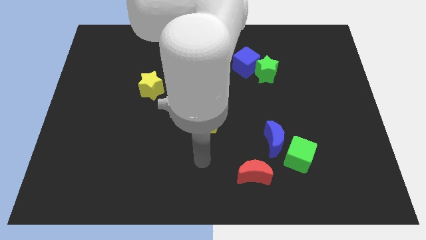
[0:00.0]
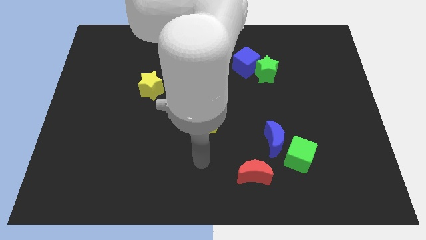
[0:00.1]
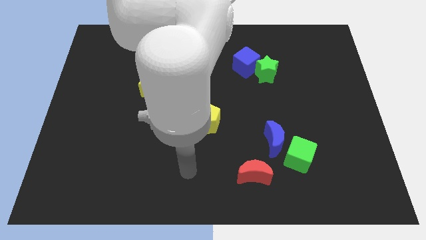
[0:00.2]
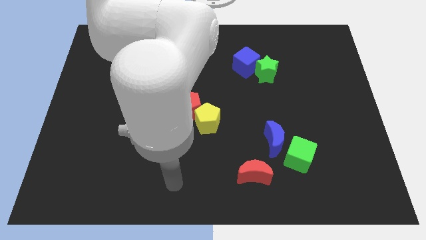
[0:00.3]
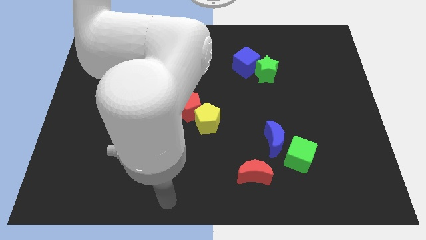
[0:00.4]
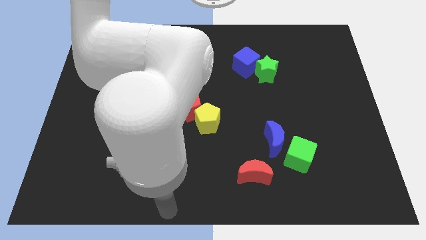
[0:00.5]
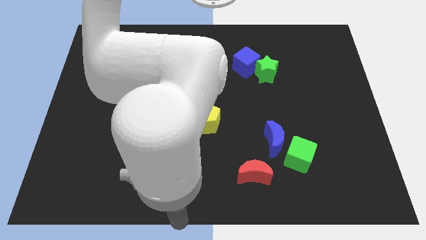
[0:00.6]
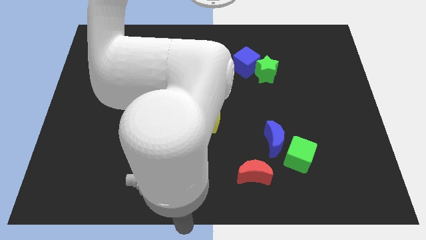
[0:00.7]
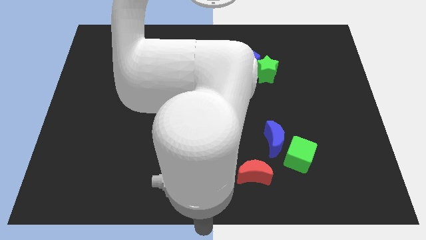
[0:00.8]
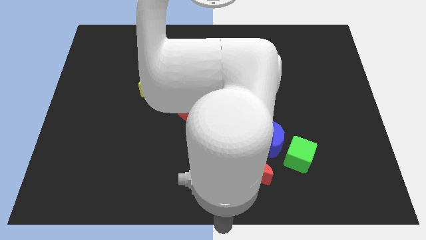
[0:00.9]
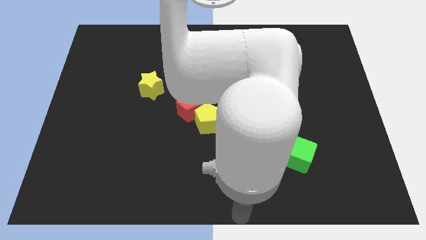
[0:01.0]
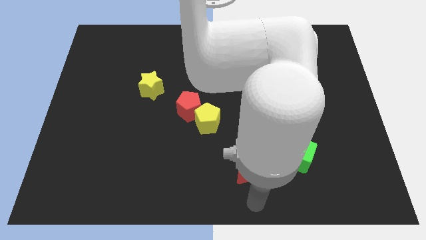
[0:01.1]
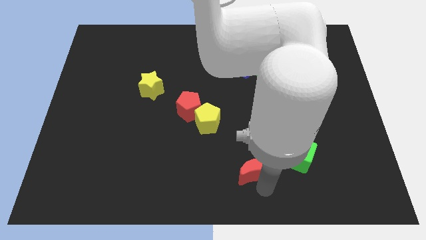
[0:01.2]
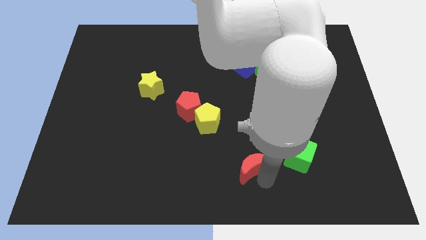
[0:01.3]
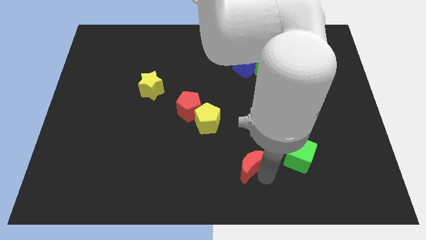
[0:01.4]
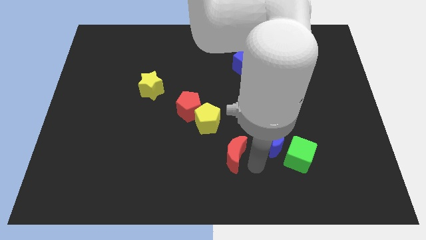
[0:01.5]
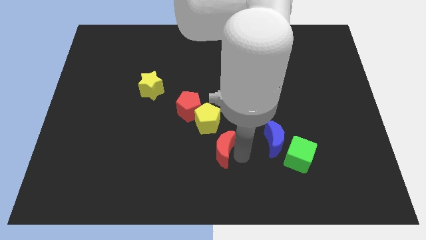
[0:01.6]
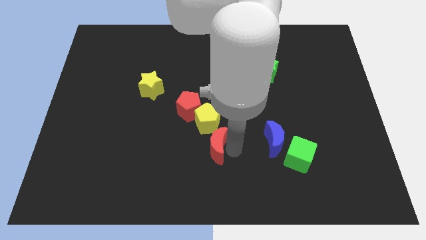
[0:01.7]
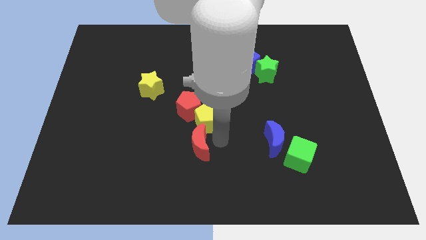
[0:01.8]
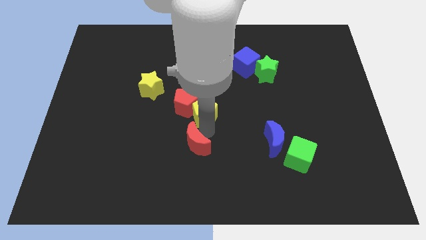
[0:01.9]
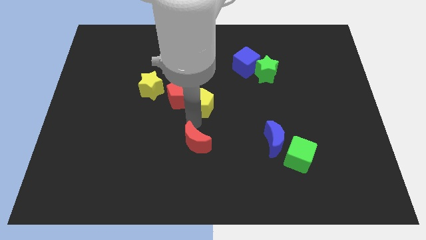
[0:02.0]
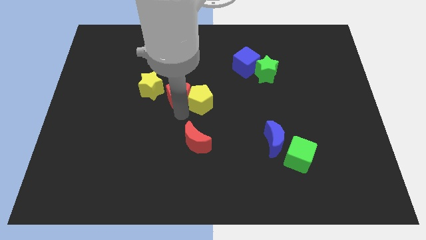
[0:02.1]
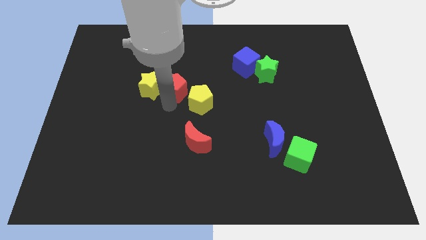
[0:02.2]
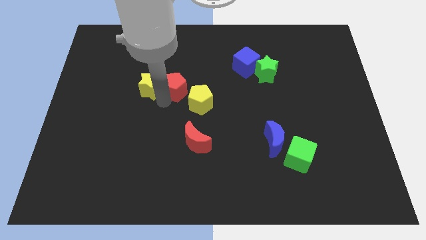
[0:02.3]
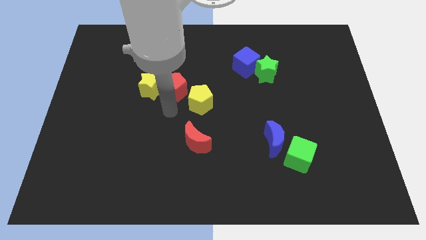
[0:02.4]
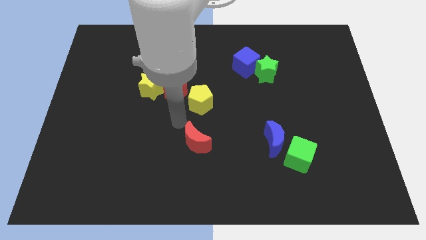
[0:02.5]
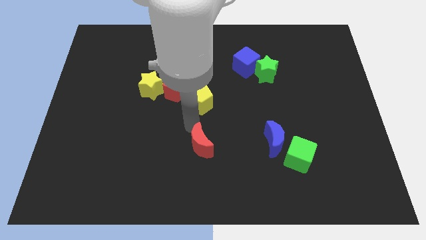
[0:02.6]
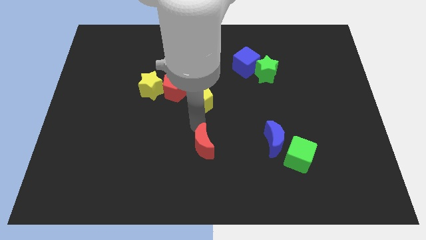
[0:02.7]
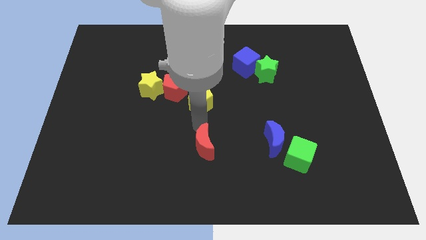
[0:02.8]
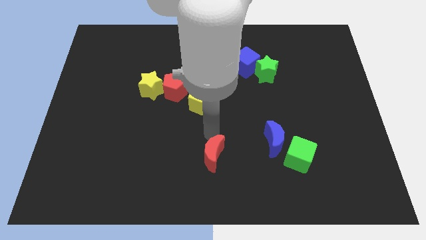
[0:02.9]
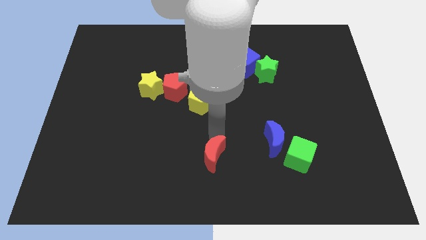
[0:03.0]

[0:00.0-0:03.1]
slide red moon parallel to green cube

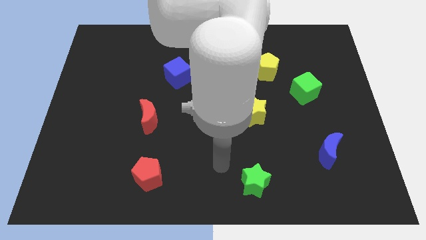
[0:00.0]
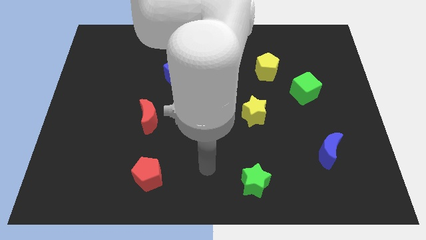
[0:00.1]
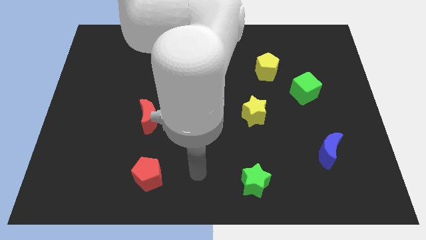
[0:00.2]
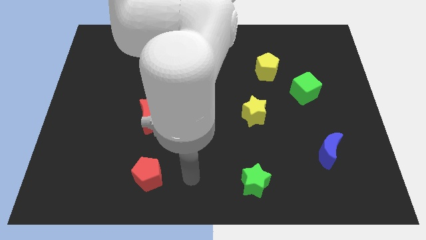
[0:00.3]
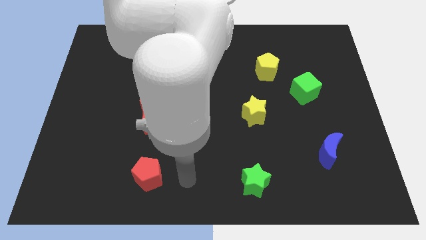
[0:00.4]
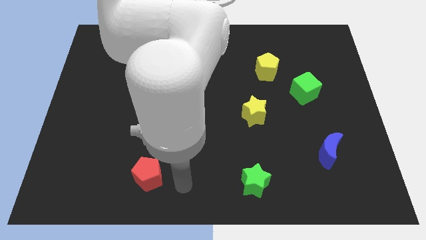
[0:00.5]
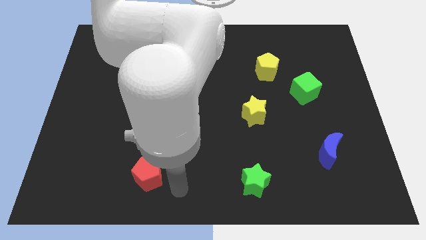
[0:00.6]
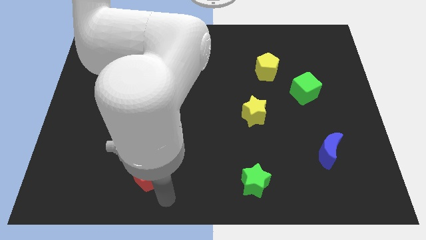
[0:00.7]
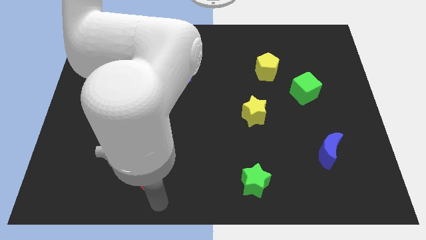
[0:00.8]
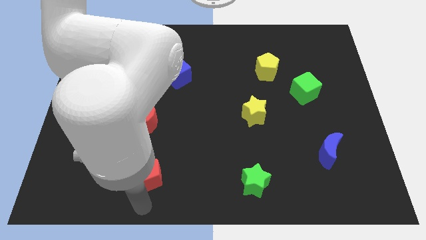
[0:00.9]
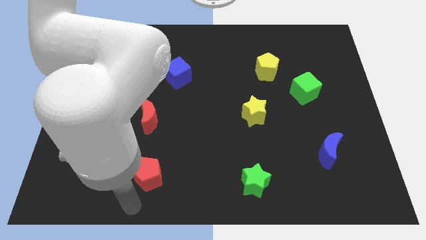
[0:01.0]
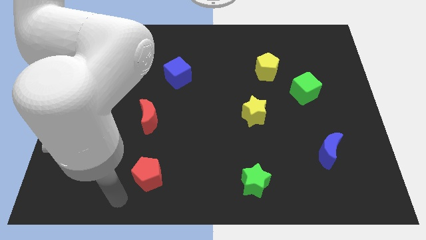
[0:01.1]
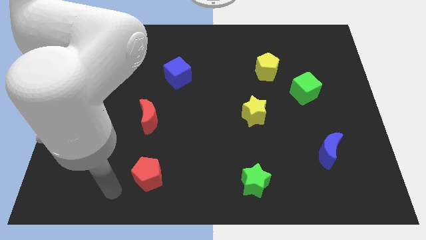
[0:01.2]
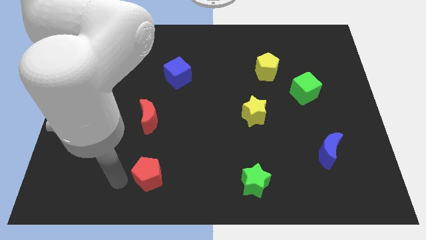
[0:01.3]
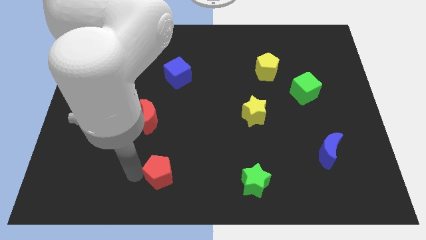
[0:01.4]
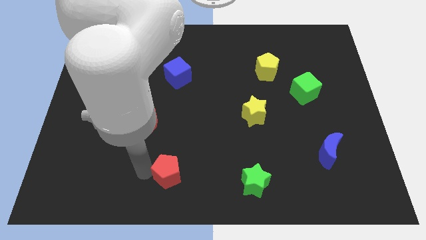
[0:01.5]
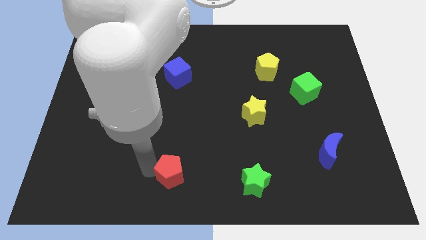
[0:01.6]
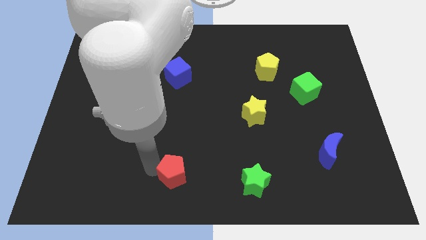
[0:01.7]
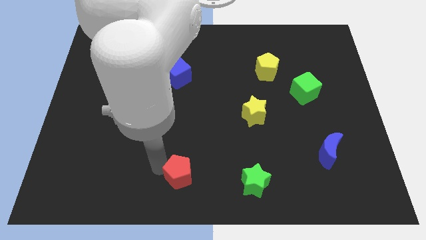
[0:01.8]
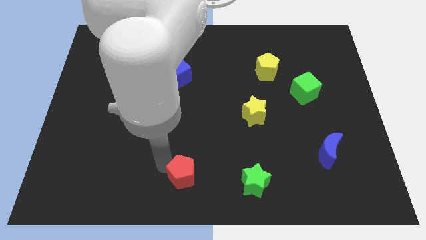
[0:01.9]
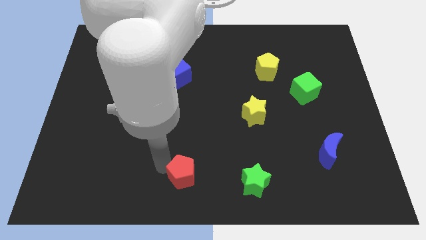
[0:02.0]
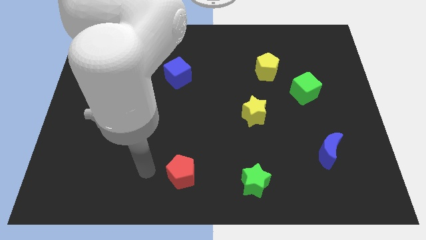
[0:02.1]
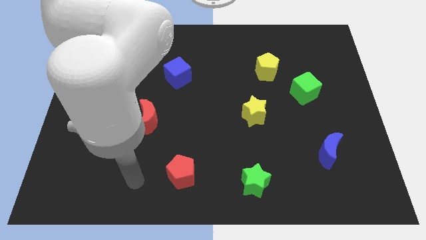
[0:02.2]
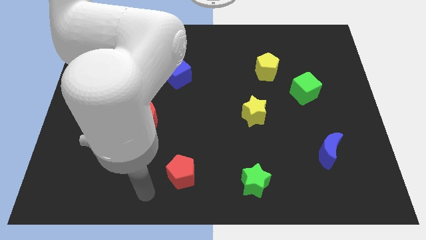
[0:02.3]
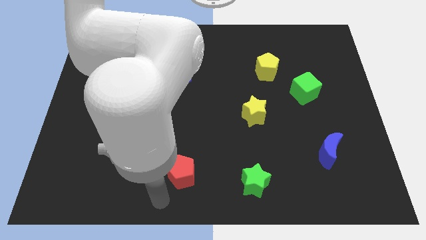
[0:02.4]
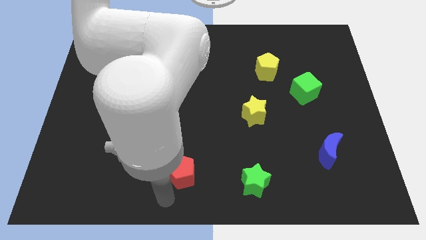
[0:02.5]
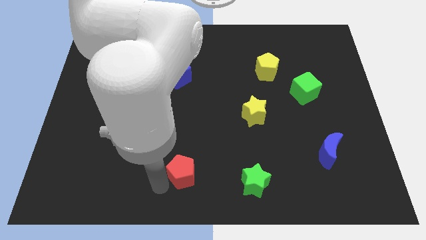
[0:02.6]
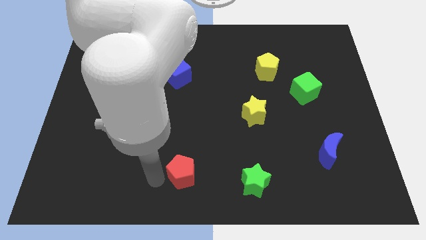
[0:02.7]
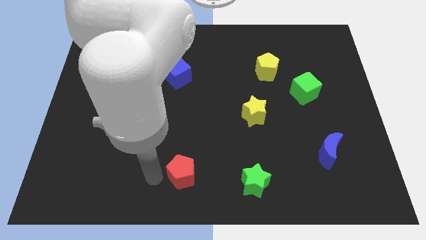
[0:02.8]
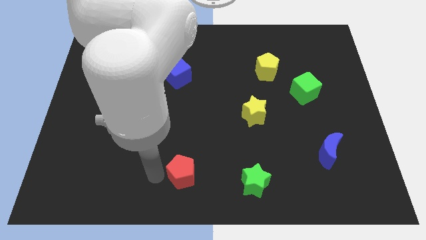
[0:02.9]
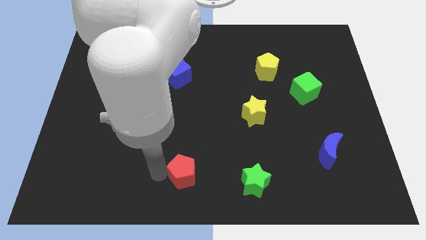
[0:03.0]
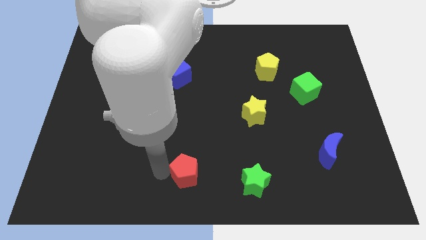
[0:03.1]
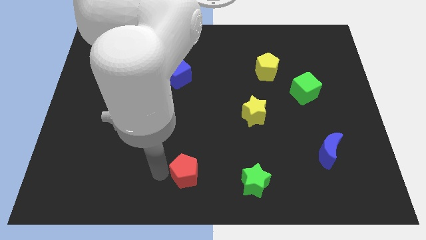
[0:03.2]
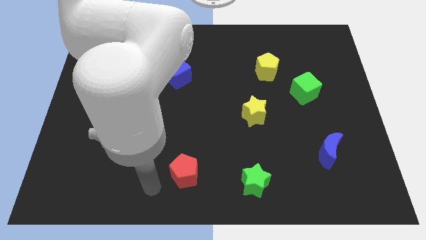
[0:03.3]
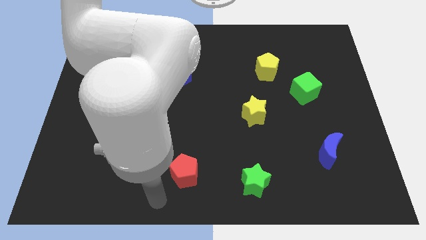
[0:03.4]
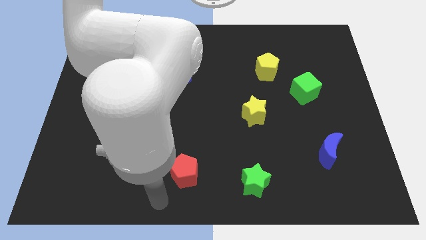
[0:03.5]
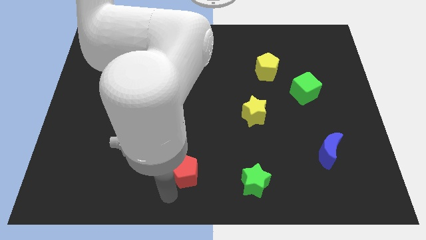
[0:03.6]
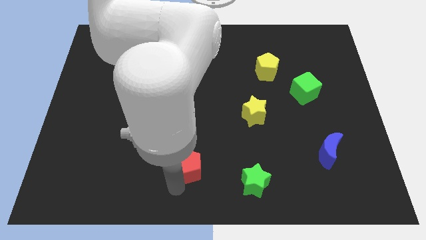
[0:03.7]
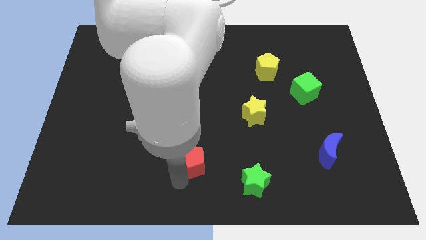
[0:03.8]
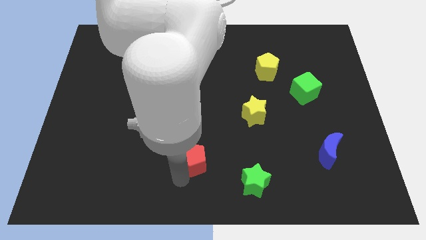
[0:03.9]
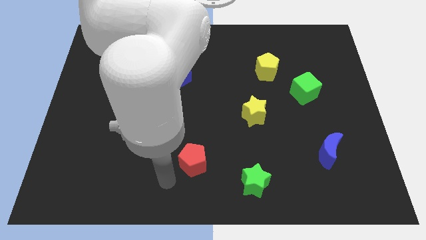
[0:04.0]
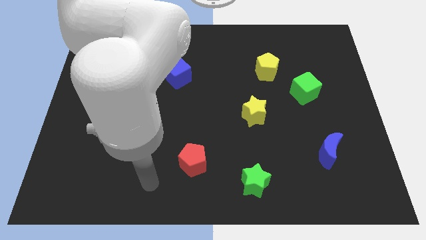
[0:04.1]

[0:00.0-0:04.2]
move the red pentagon slightly towards up

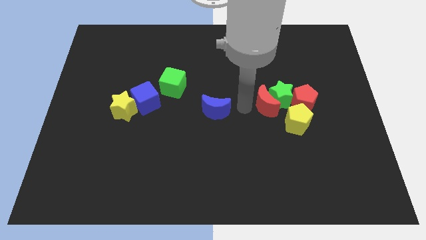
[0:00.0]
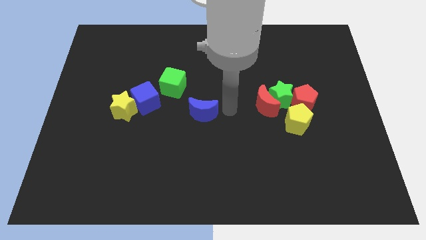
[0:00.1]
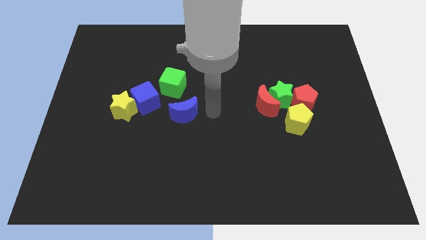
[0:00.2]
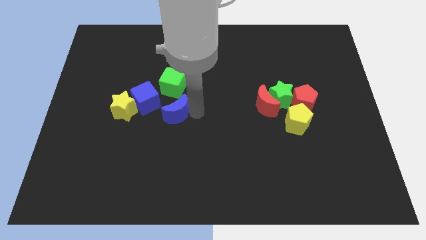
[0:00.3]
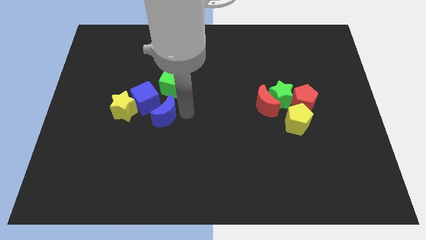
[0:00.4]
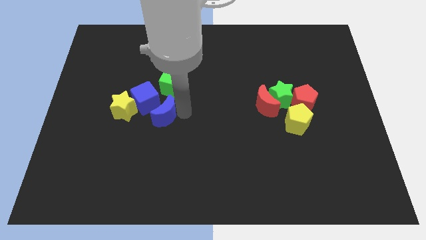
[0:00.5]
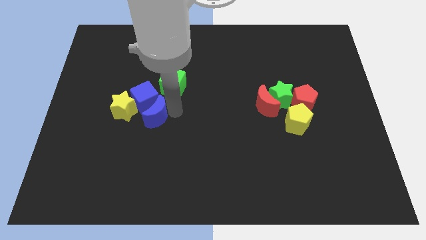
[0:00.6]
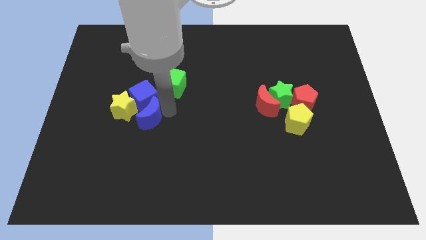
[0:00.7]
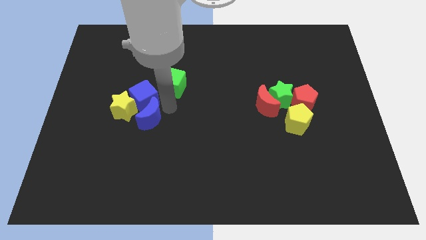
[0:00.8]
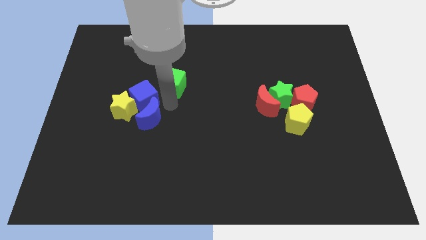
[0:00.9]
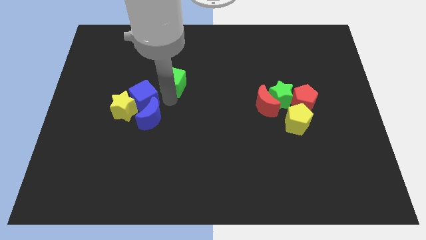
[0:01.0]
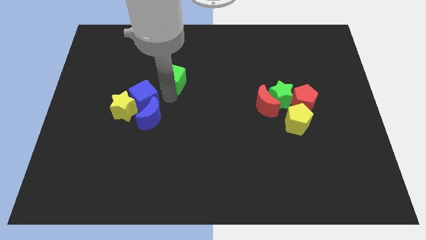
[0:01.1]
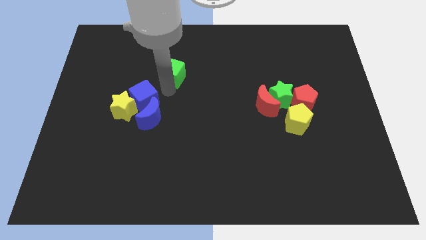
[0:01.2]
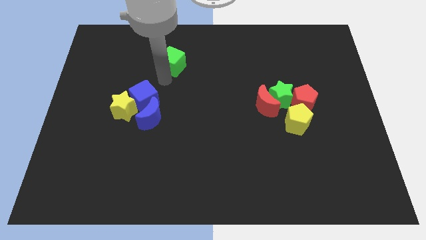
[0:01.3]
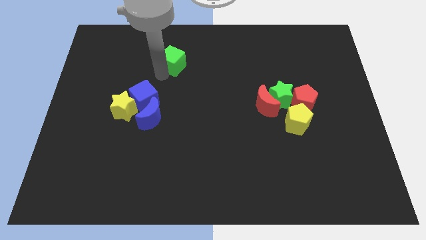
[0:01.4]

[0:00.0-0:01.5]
move the green block slightly towards the top

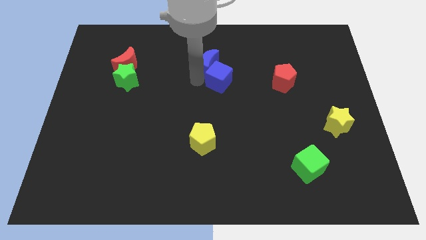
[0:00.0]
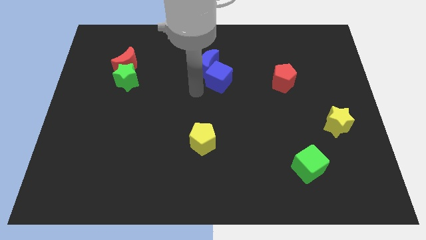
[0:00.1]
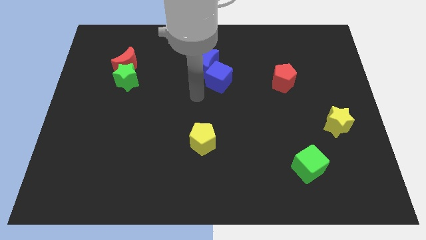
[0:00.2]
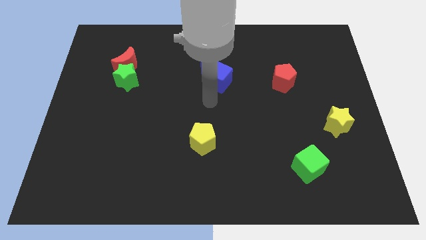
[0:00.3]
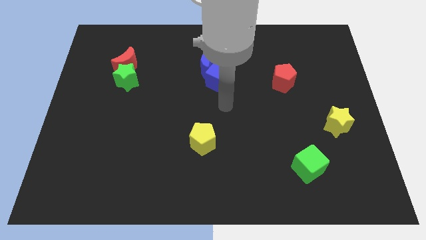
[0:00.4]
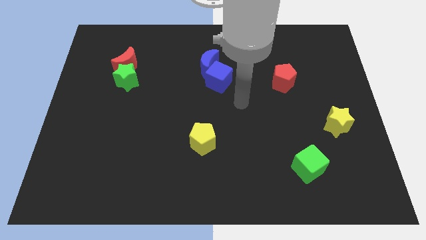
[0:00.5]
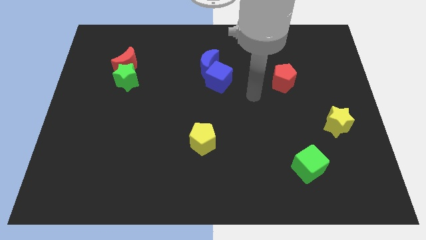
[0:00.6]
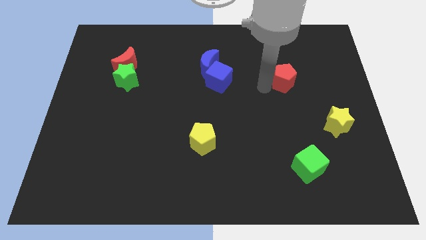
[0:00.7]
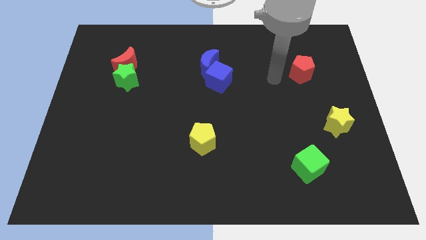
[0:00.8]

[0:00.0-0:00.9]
move your arm left to the red pentagon
